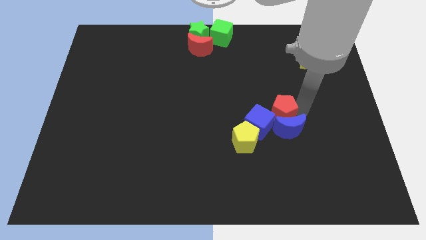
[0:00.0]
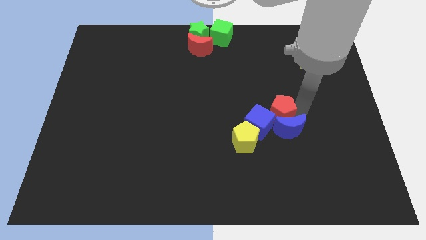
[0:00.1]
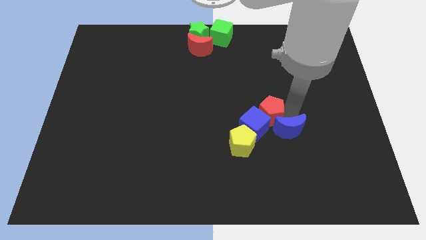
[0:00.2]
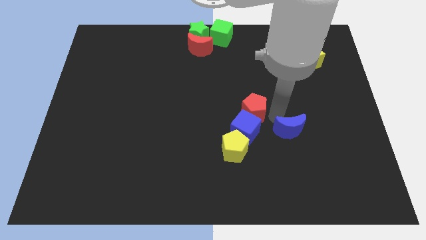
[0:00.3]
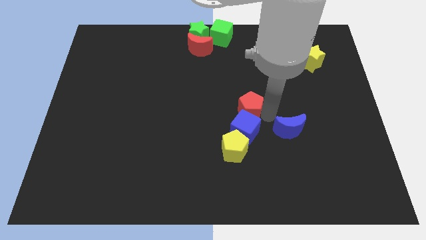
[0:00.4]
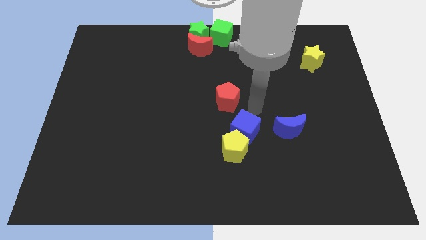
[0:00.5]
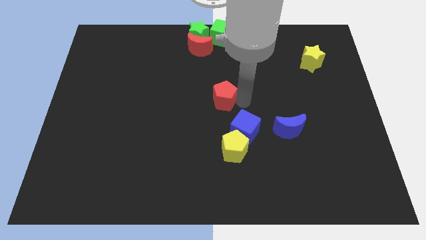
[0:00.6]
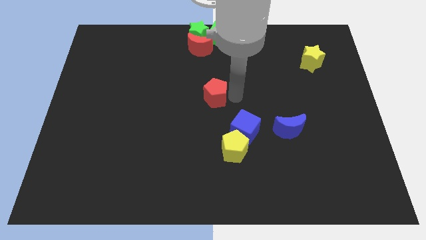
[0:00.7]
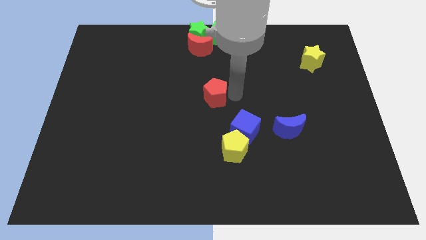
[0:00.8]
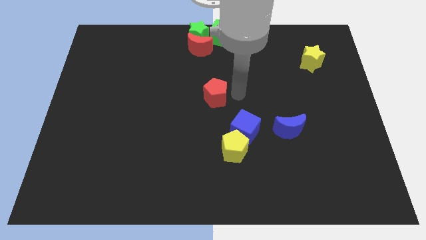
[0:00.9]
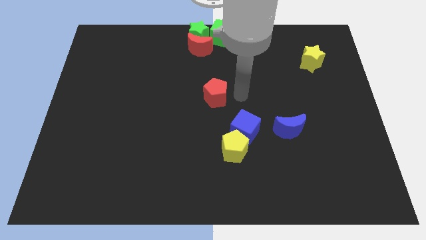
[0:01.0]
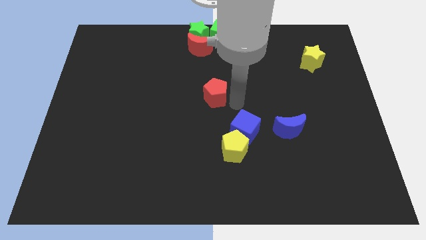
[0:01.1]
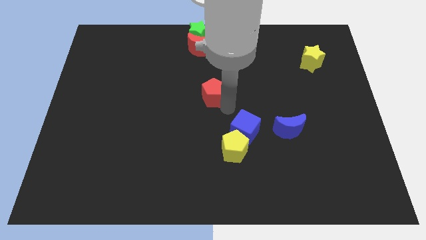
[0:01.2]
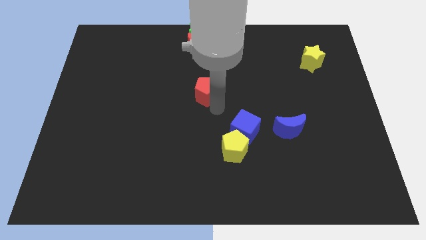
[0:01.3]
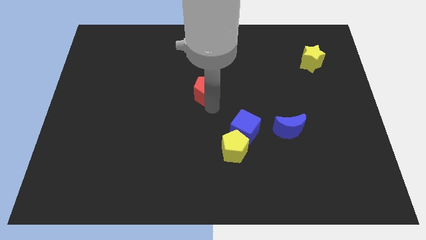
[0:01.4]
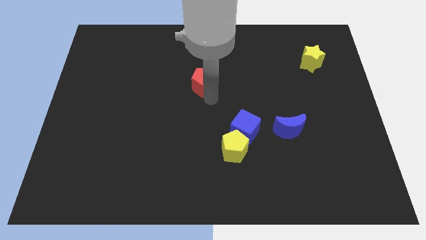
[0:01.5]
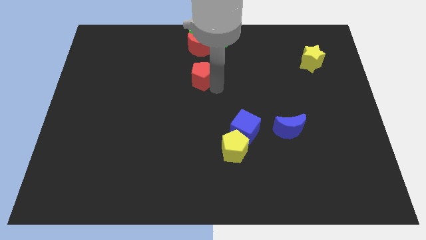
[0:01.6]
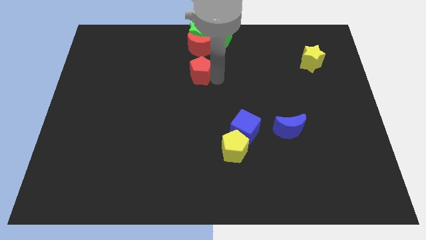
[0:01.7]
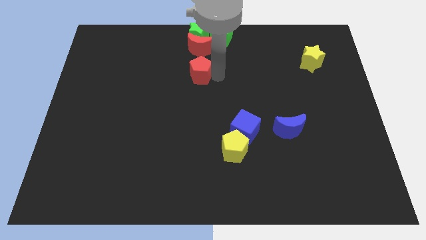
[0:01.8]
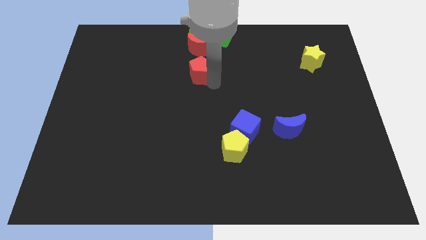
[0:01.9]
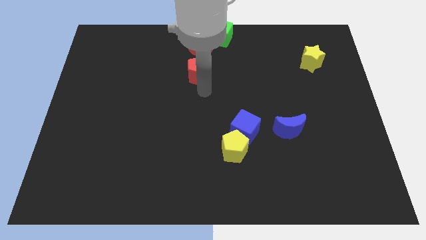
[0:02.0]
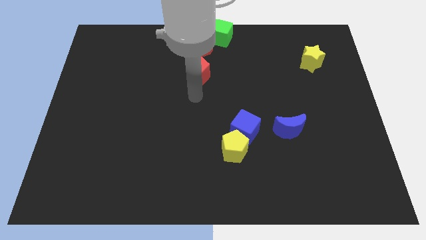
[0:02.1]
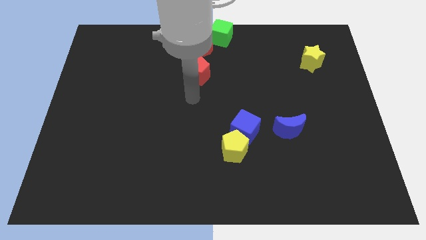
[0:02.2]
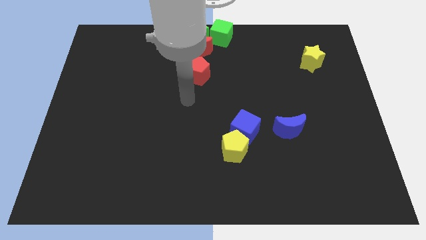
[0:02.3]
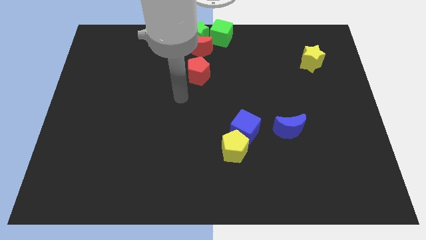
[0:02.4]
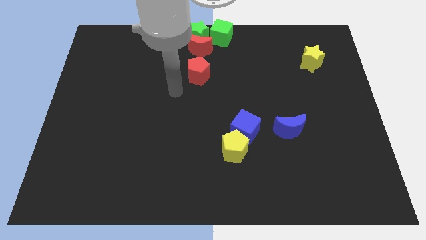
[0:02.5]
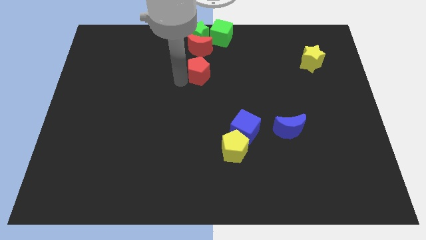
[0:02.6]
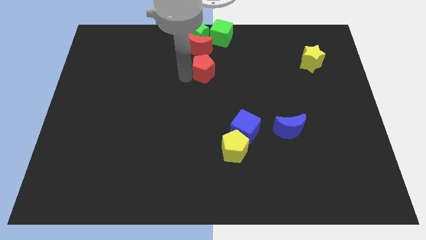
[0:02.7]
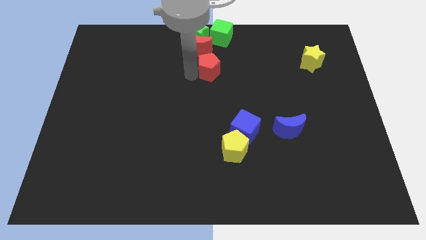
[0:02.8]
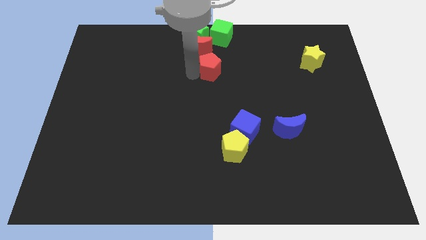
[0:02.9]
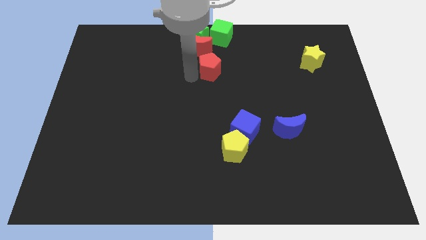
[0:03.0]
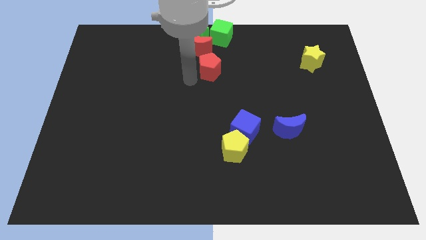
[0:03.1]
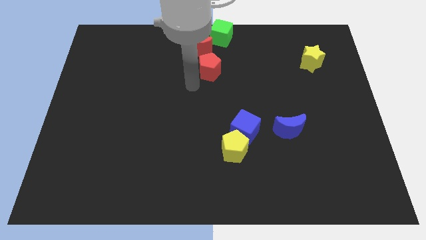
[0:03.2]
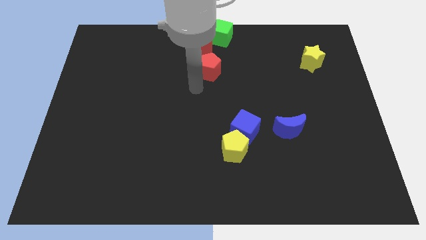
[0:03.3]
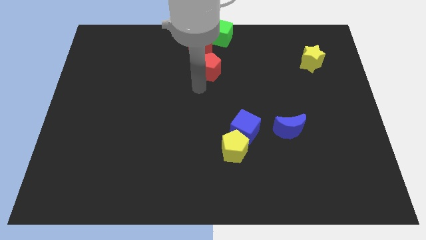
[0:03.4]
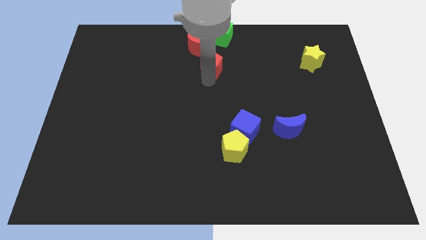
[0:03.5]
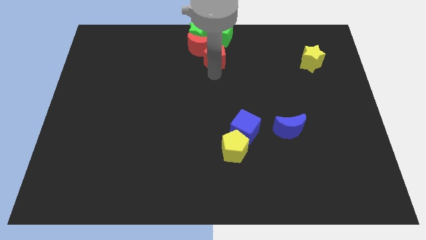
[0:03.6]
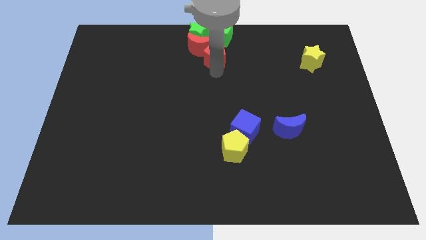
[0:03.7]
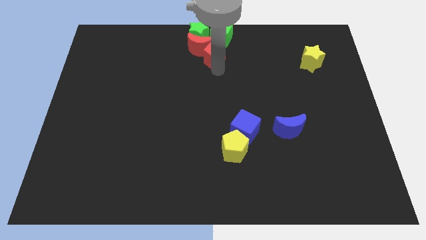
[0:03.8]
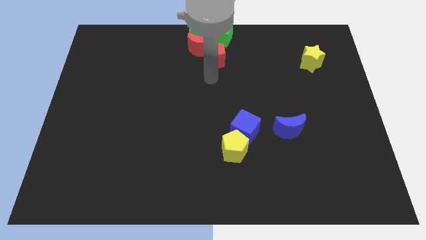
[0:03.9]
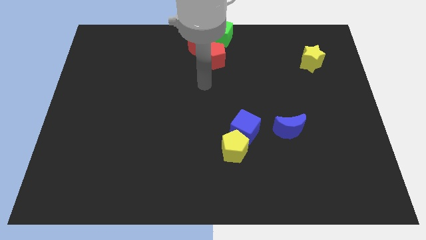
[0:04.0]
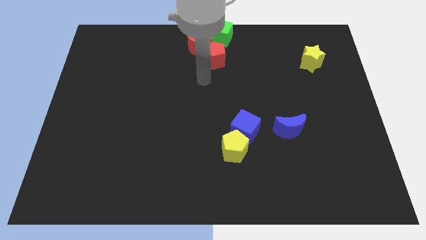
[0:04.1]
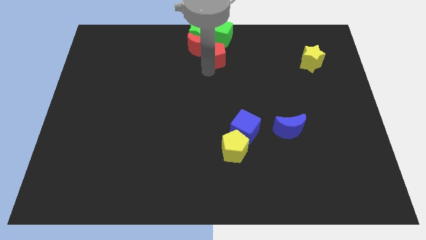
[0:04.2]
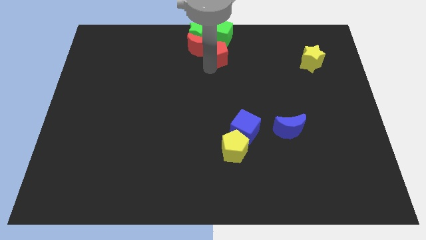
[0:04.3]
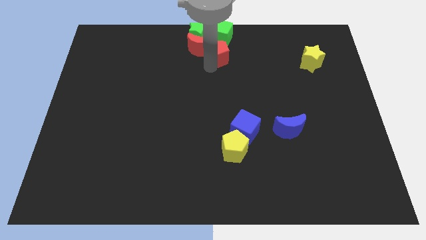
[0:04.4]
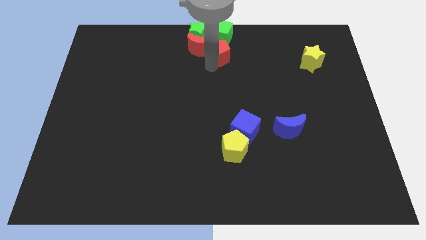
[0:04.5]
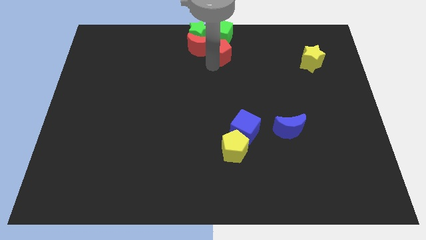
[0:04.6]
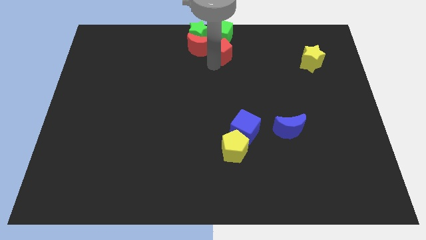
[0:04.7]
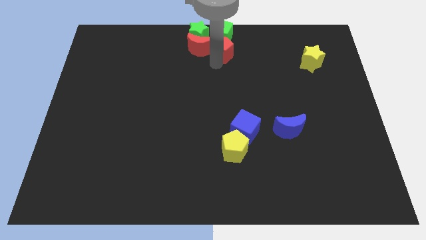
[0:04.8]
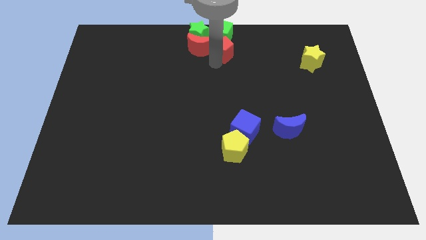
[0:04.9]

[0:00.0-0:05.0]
place the red pentagon at the bottom of the green cube

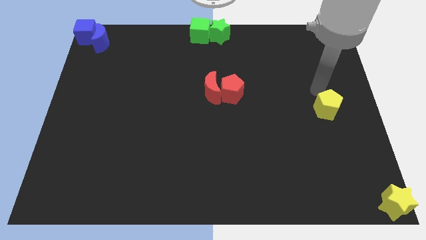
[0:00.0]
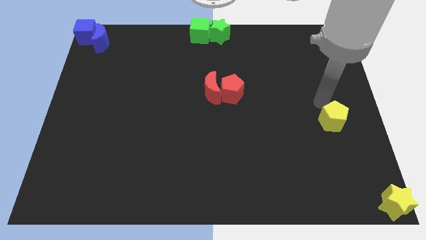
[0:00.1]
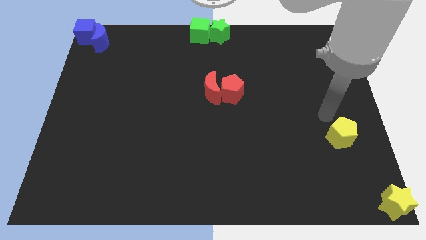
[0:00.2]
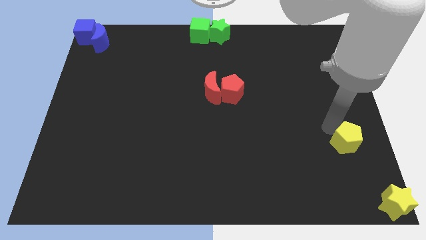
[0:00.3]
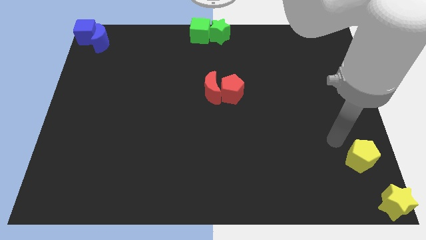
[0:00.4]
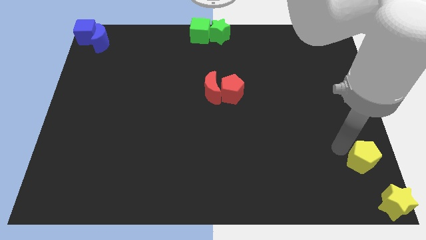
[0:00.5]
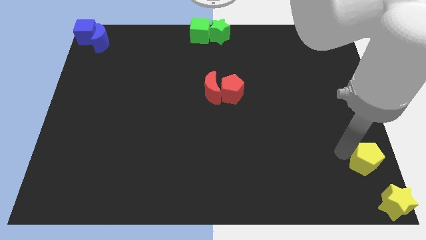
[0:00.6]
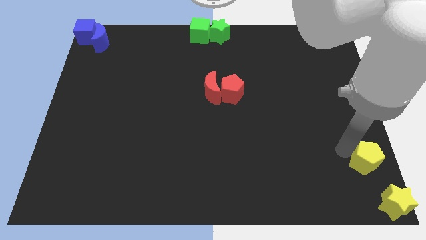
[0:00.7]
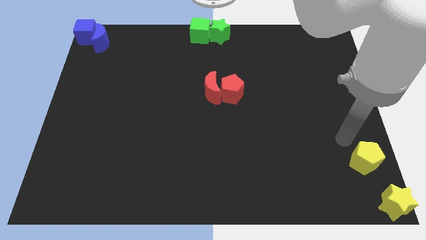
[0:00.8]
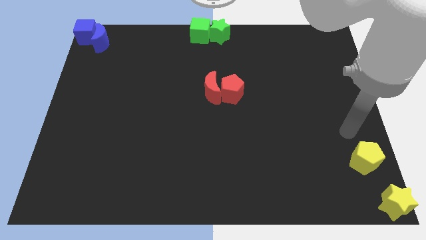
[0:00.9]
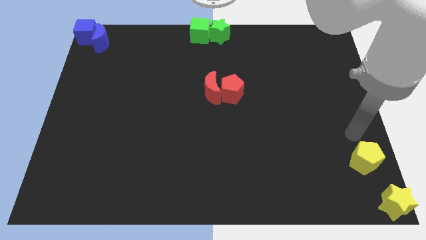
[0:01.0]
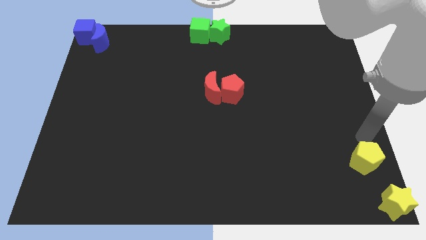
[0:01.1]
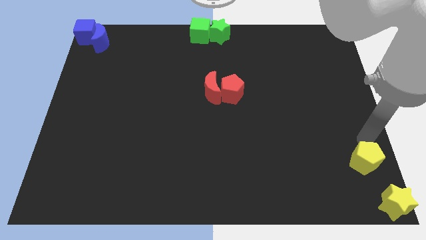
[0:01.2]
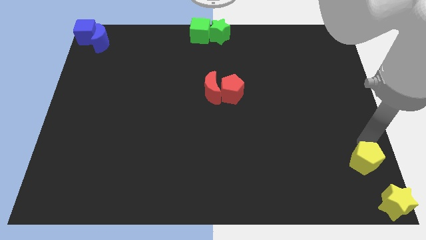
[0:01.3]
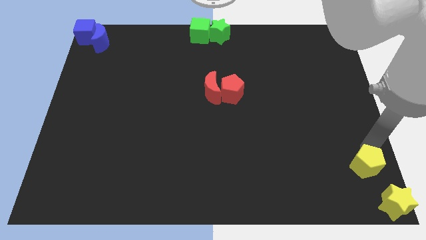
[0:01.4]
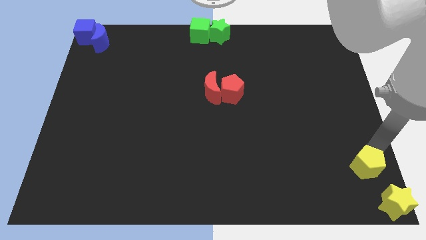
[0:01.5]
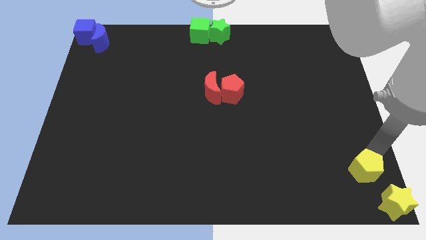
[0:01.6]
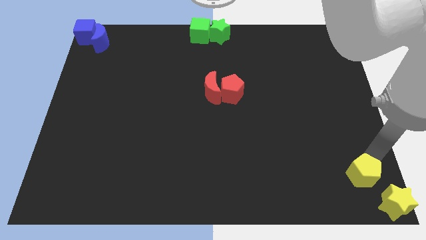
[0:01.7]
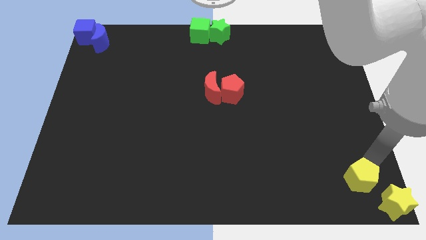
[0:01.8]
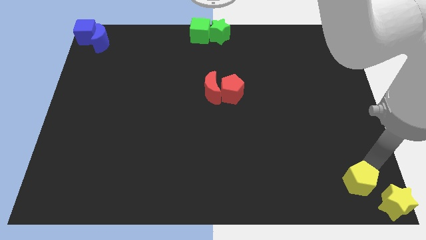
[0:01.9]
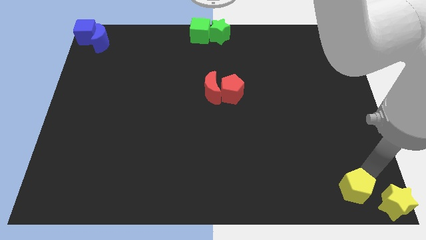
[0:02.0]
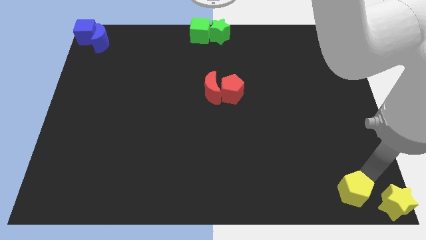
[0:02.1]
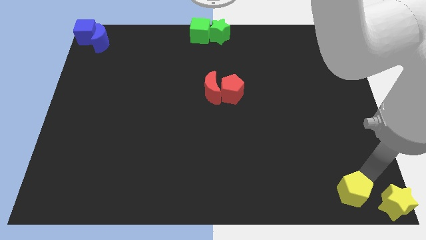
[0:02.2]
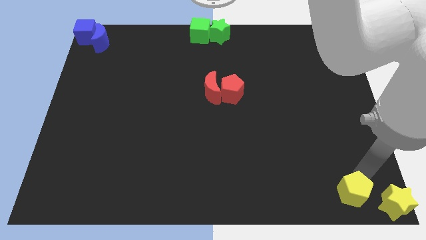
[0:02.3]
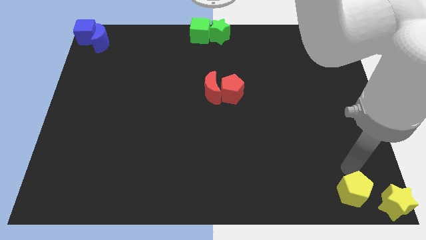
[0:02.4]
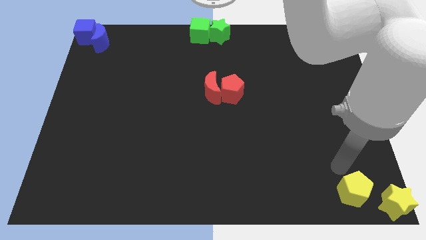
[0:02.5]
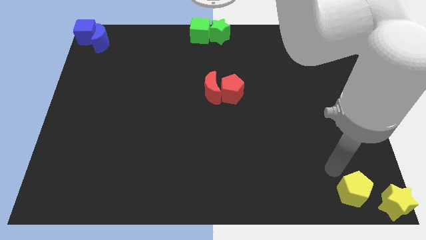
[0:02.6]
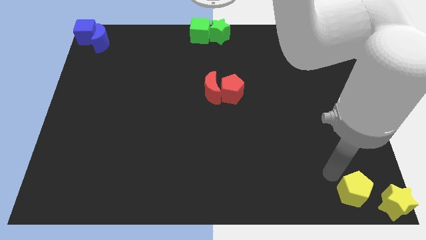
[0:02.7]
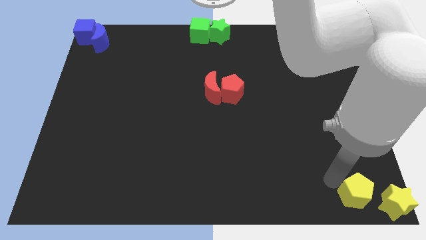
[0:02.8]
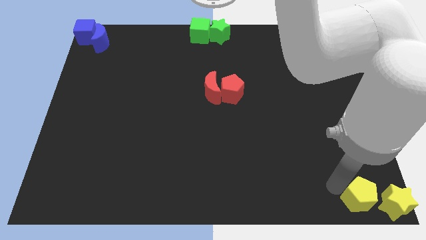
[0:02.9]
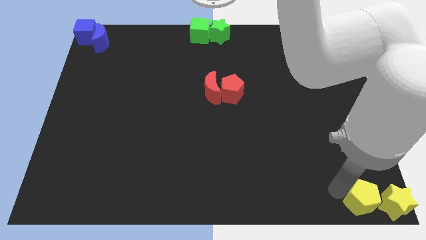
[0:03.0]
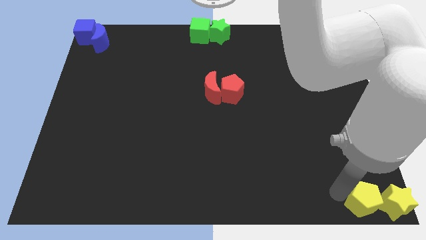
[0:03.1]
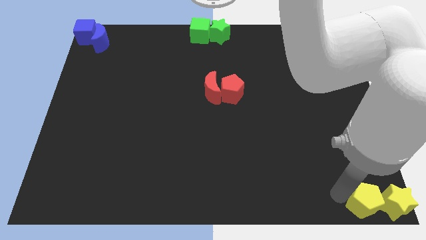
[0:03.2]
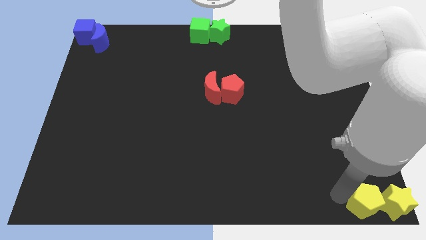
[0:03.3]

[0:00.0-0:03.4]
push the yellow pentagon left to the yellow star

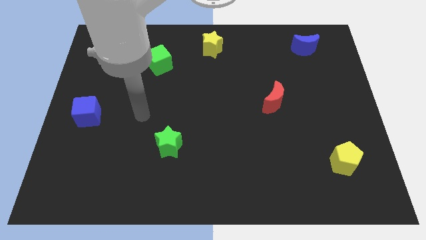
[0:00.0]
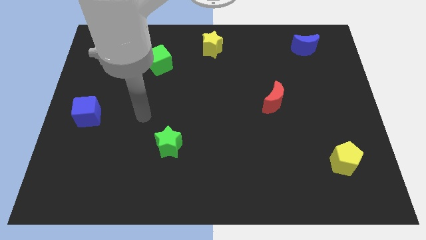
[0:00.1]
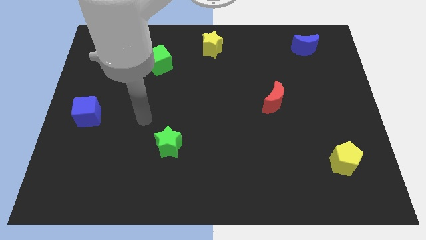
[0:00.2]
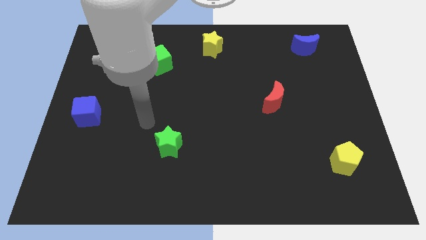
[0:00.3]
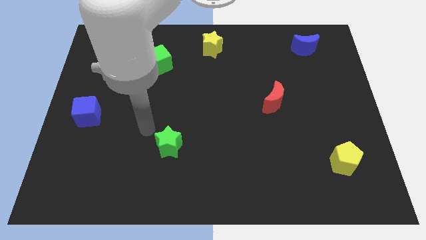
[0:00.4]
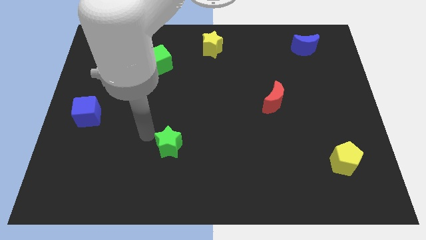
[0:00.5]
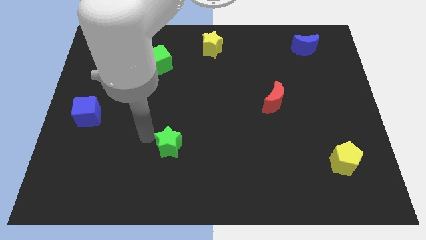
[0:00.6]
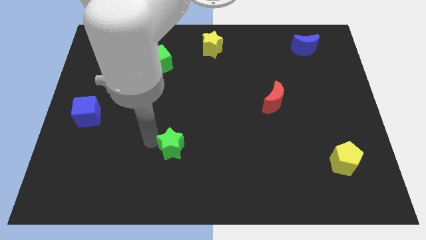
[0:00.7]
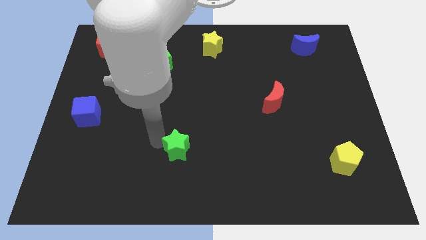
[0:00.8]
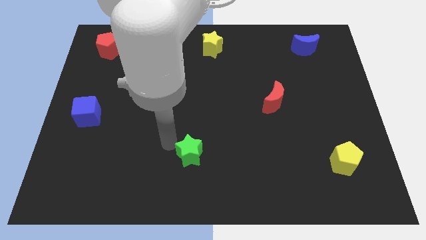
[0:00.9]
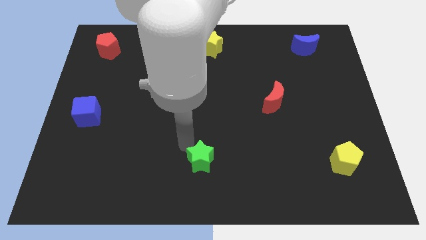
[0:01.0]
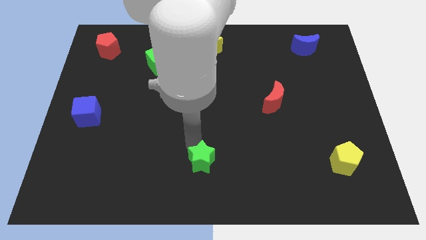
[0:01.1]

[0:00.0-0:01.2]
push the green star slightly to the bottom right
